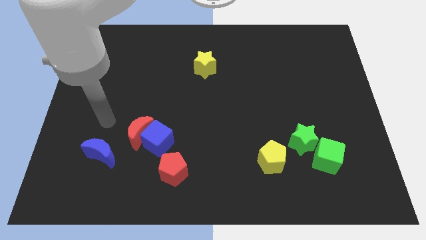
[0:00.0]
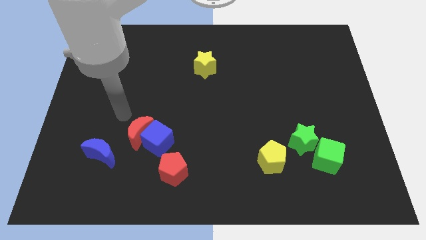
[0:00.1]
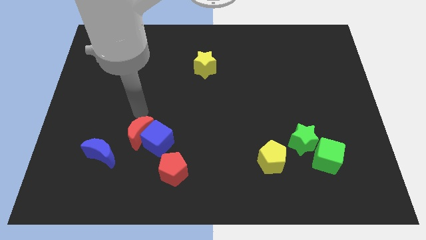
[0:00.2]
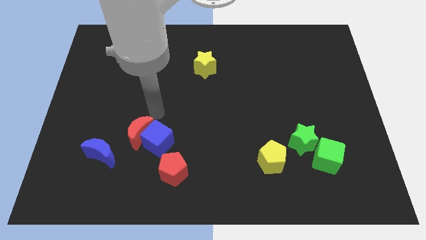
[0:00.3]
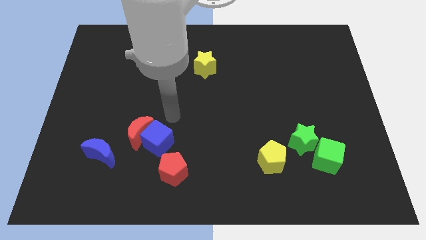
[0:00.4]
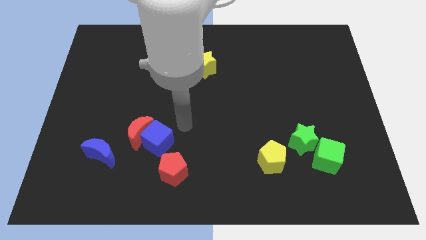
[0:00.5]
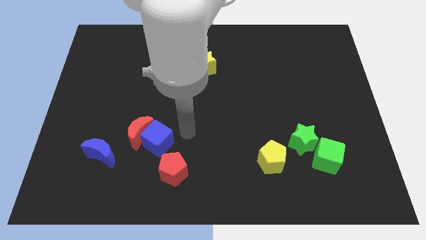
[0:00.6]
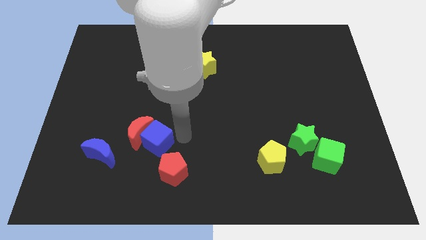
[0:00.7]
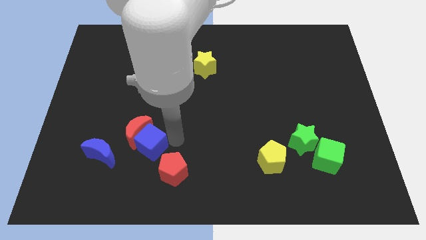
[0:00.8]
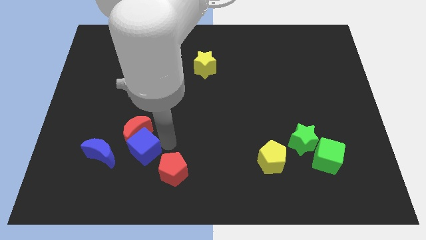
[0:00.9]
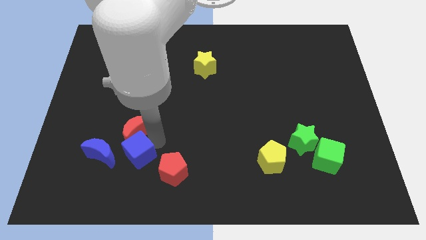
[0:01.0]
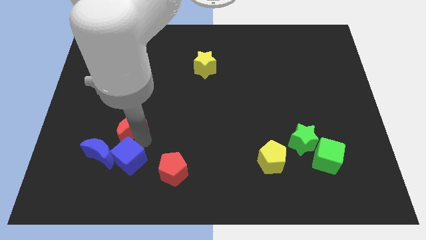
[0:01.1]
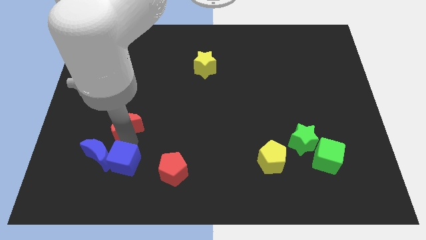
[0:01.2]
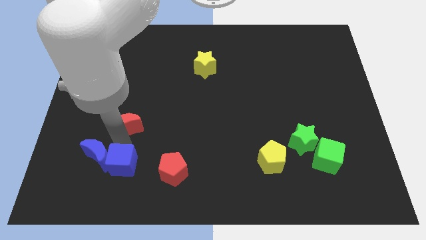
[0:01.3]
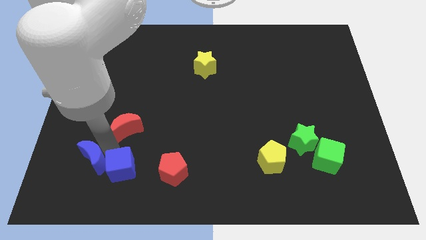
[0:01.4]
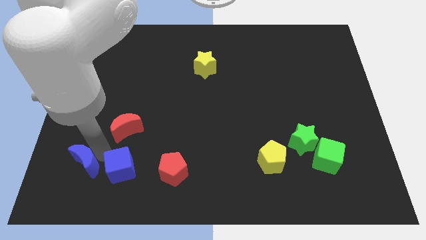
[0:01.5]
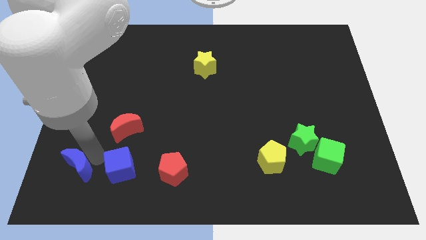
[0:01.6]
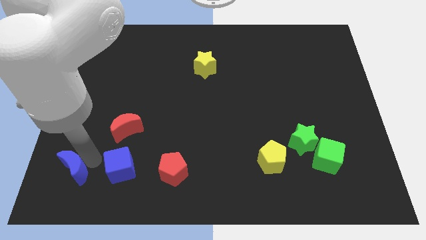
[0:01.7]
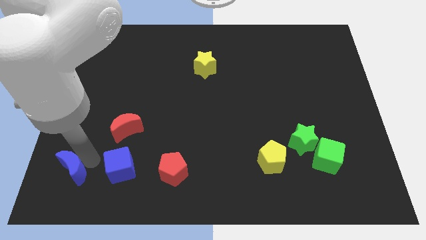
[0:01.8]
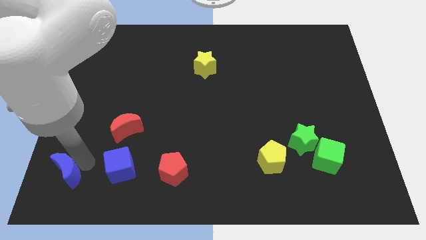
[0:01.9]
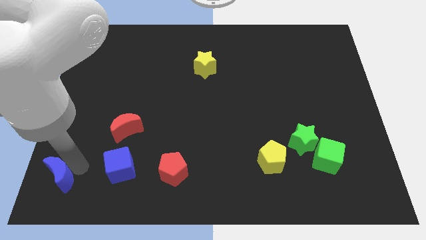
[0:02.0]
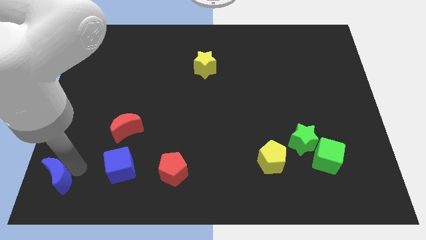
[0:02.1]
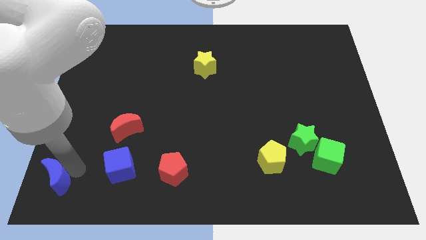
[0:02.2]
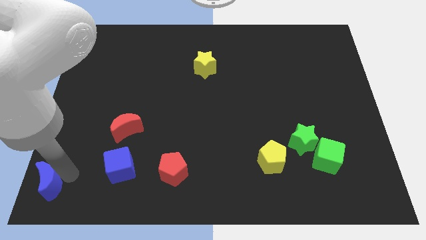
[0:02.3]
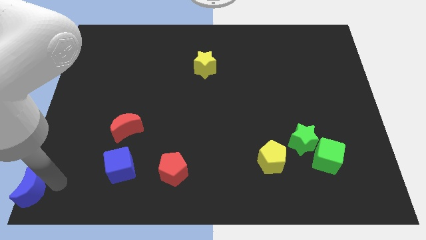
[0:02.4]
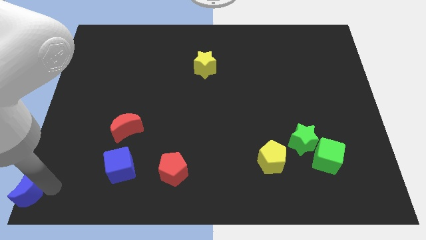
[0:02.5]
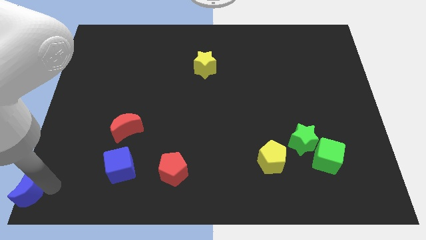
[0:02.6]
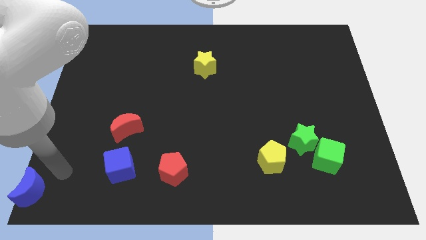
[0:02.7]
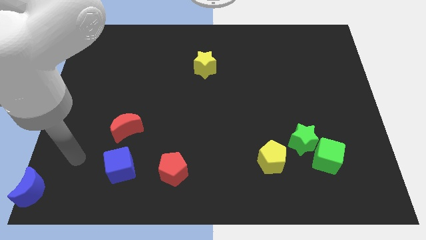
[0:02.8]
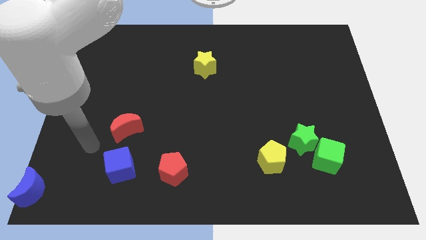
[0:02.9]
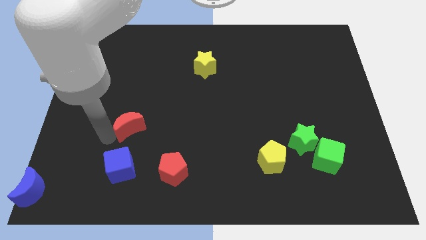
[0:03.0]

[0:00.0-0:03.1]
move the blue blocks to the left side of the table

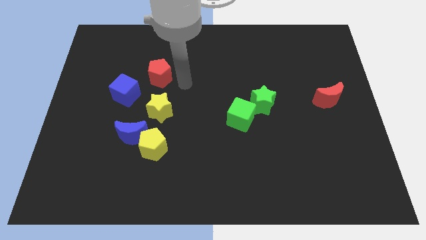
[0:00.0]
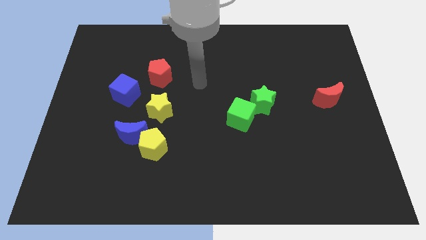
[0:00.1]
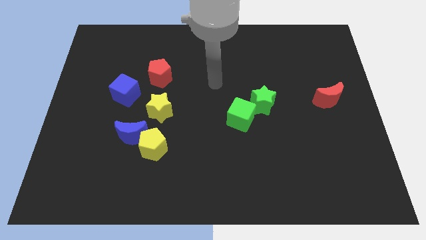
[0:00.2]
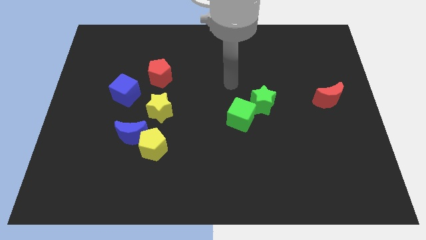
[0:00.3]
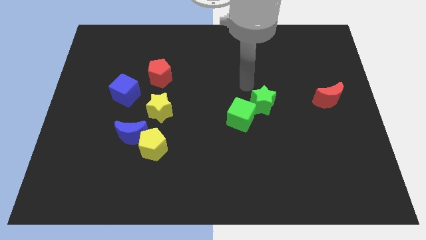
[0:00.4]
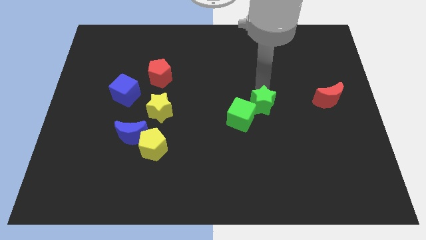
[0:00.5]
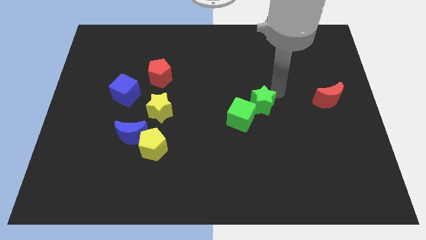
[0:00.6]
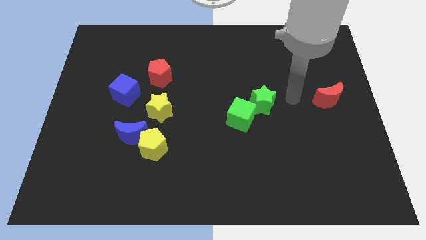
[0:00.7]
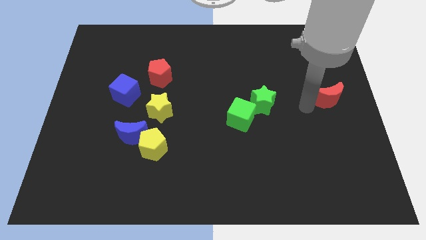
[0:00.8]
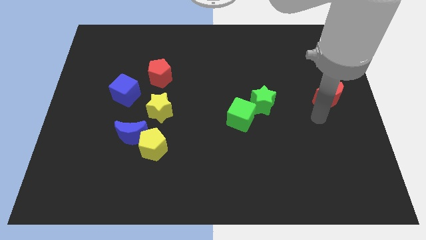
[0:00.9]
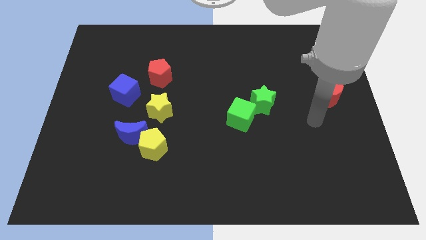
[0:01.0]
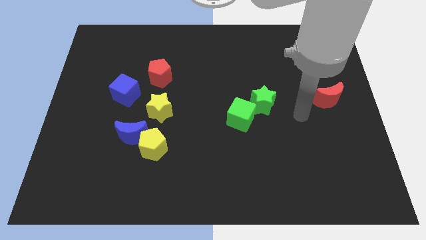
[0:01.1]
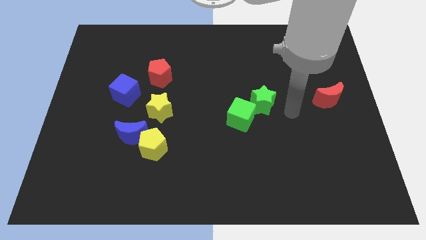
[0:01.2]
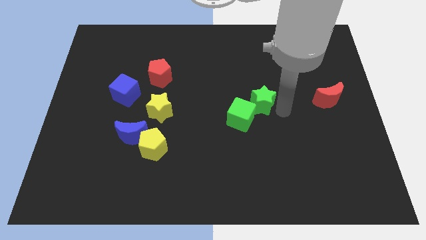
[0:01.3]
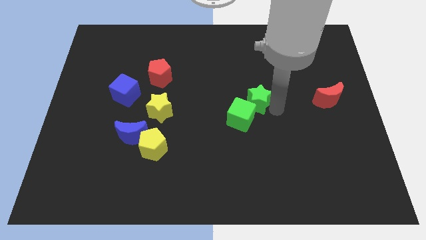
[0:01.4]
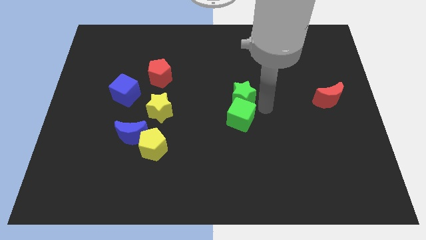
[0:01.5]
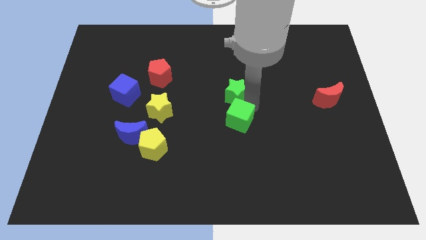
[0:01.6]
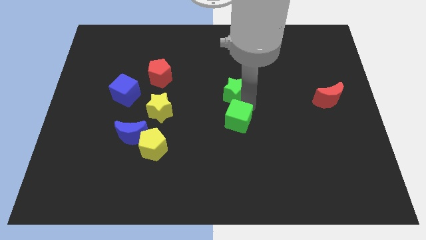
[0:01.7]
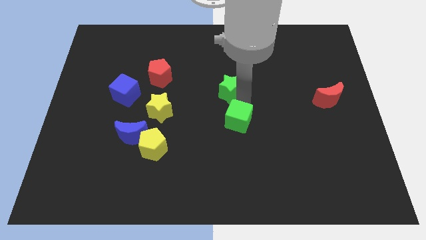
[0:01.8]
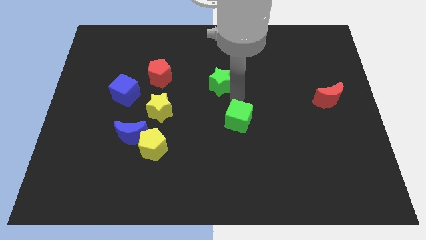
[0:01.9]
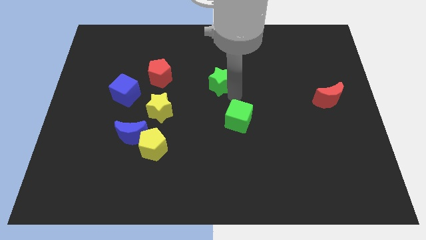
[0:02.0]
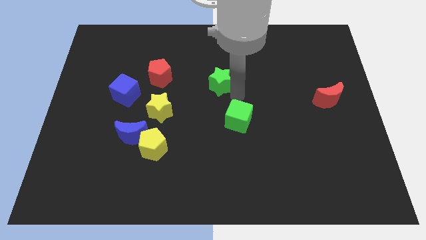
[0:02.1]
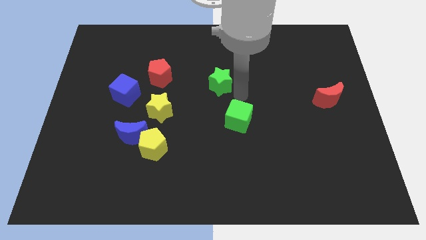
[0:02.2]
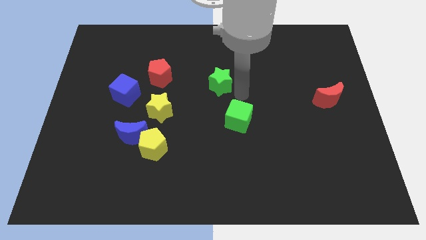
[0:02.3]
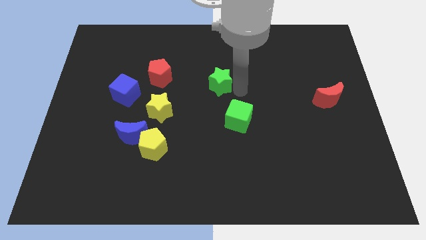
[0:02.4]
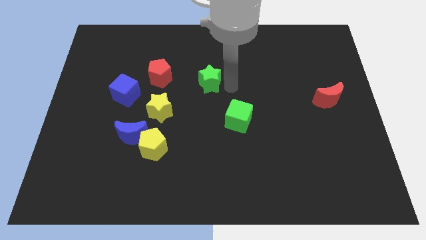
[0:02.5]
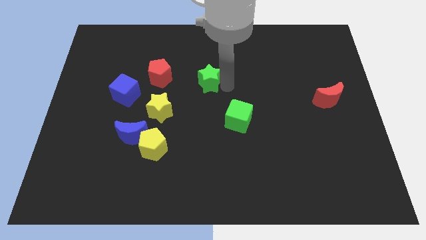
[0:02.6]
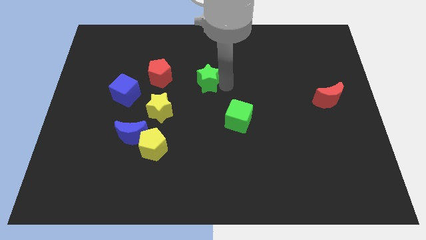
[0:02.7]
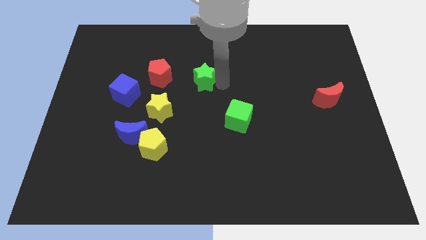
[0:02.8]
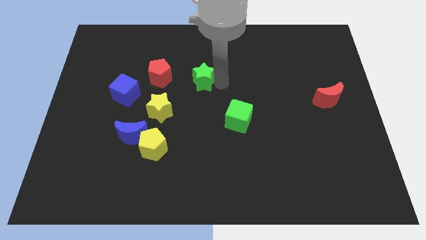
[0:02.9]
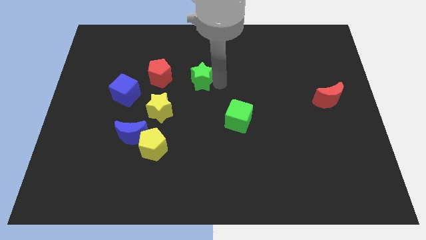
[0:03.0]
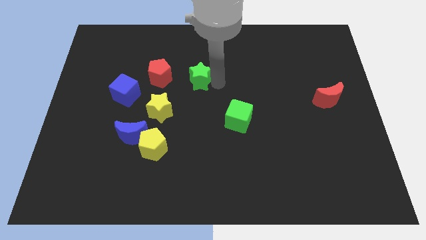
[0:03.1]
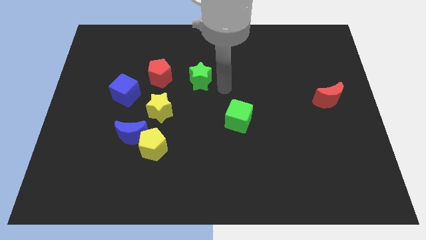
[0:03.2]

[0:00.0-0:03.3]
place green star diagonal to yellow star

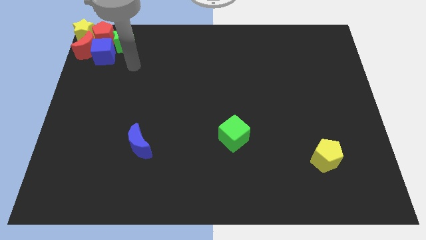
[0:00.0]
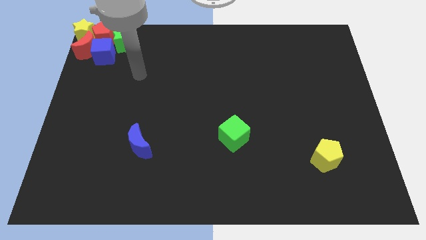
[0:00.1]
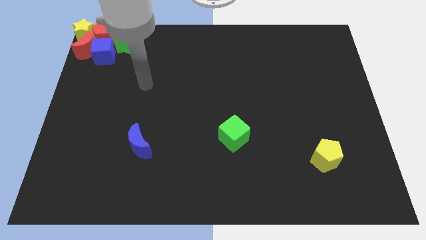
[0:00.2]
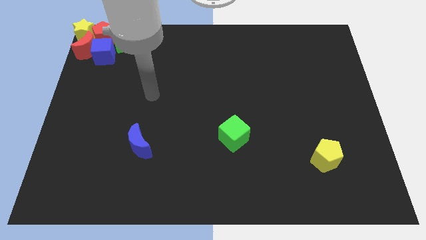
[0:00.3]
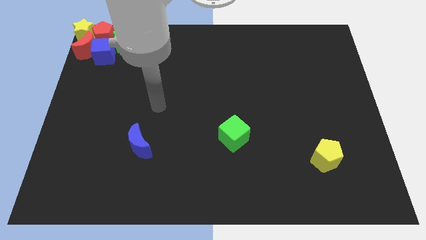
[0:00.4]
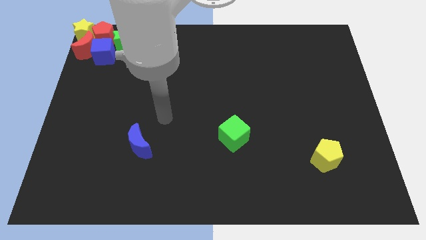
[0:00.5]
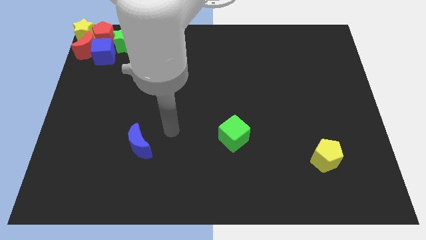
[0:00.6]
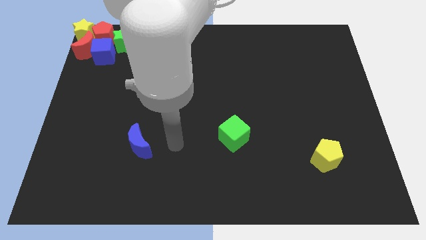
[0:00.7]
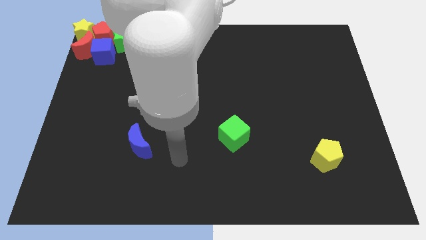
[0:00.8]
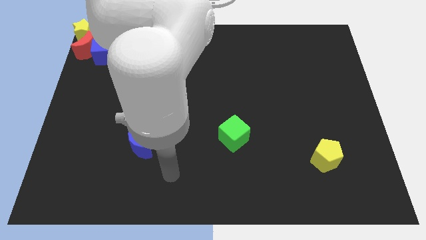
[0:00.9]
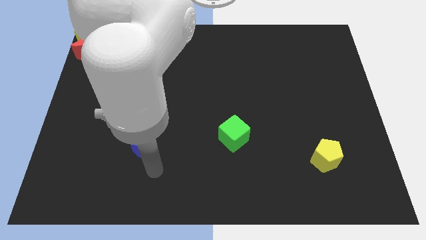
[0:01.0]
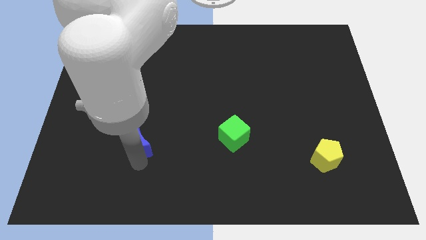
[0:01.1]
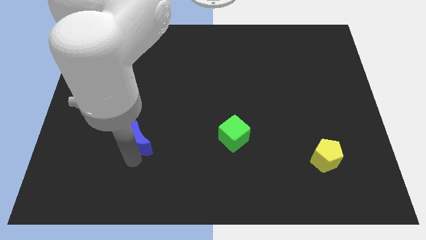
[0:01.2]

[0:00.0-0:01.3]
point your arm at the bottom of the blue crescent

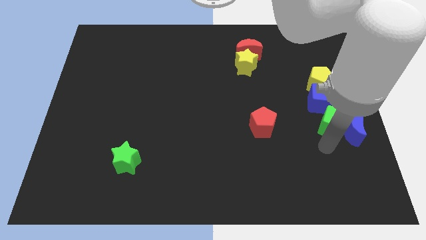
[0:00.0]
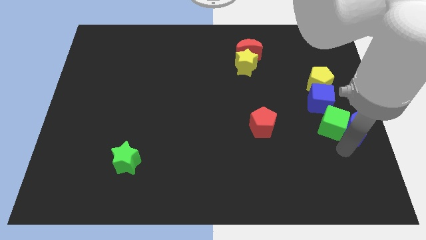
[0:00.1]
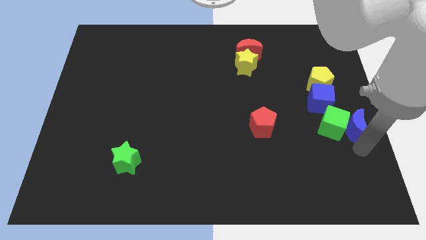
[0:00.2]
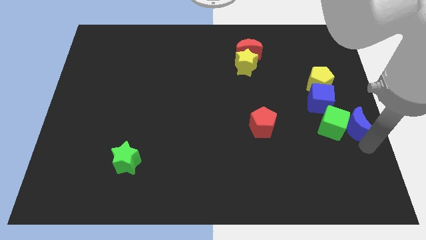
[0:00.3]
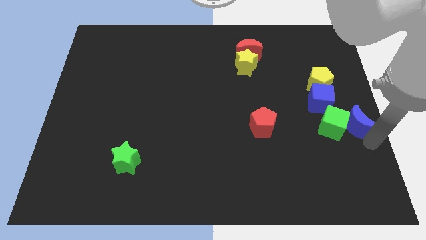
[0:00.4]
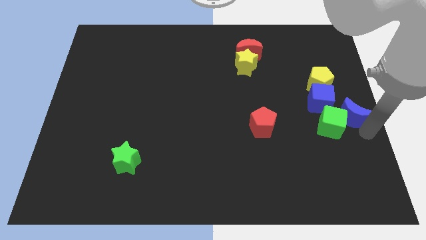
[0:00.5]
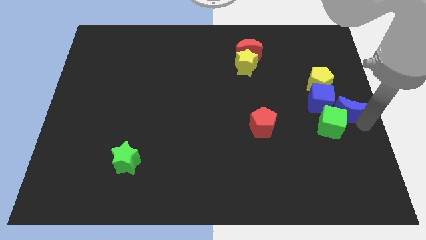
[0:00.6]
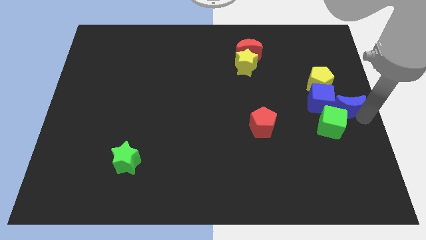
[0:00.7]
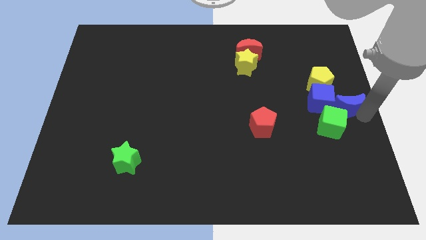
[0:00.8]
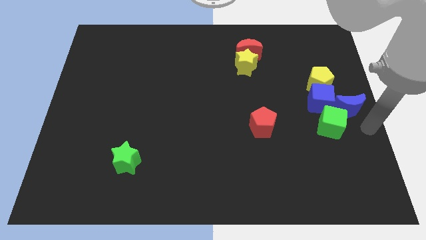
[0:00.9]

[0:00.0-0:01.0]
move the blue moon right to the blue cube

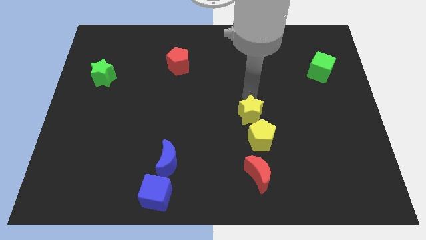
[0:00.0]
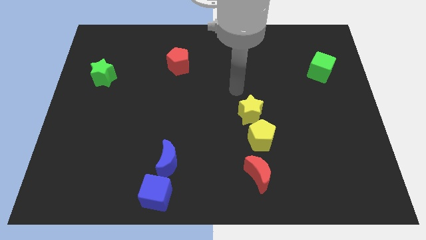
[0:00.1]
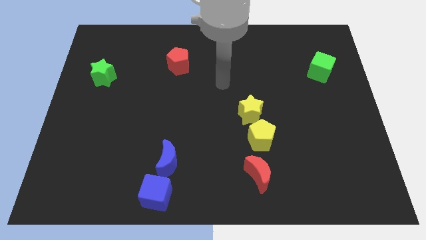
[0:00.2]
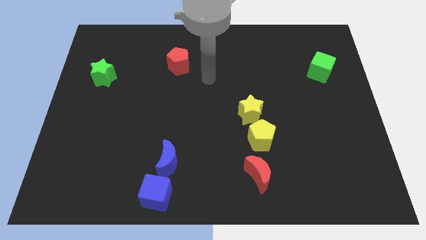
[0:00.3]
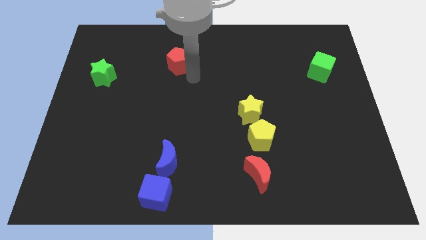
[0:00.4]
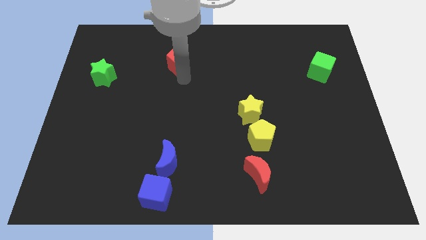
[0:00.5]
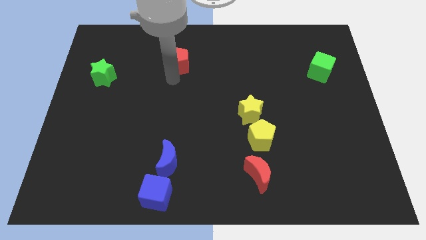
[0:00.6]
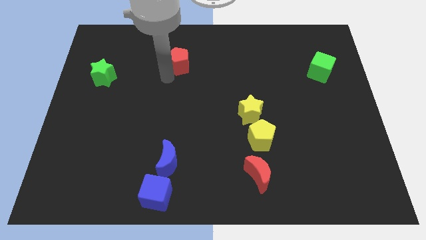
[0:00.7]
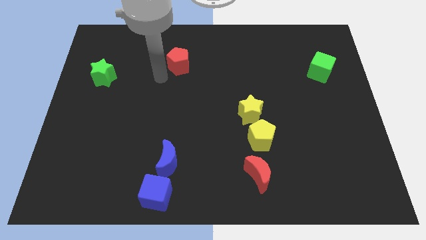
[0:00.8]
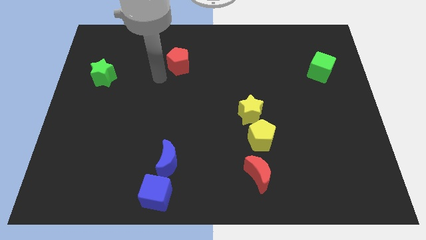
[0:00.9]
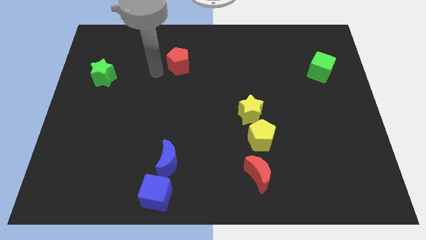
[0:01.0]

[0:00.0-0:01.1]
move your hand towards the red pentagon
